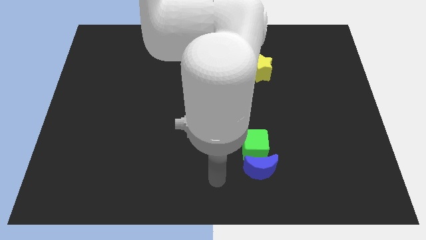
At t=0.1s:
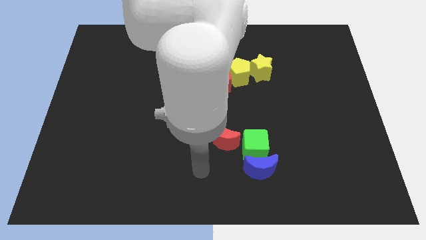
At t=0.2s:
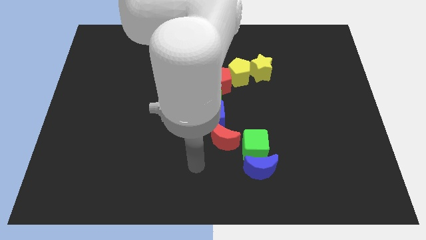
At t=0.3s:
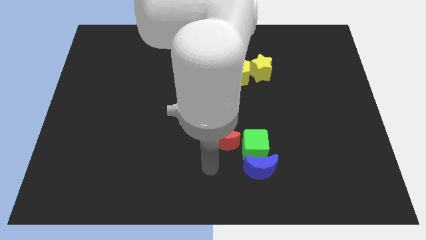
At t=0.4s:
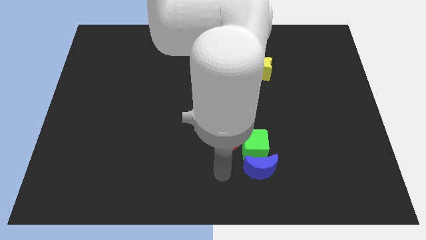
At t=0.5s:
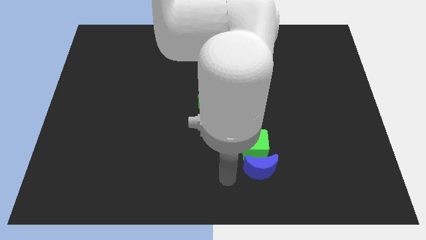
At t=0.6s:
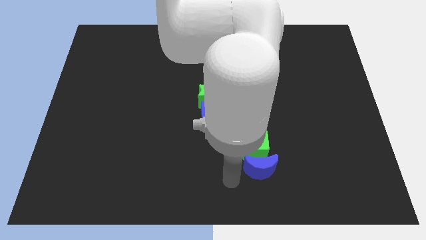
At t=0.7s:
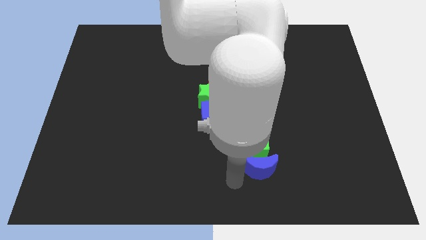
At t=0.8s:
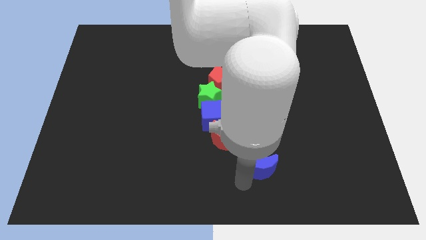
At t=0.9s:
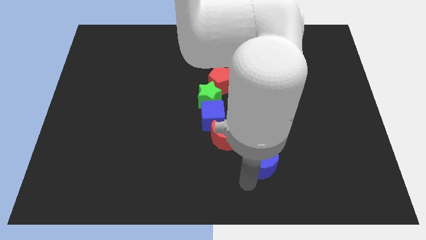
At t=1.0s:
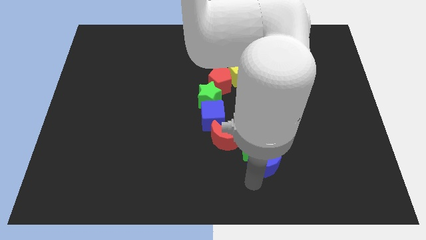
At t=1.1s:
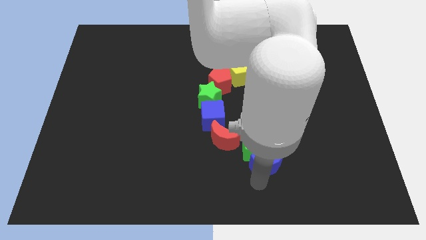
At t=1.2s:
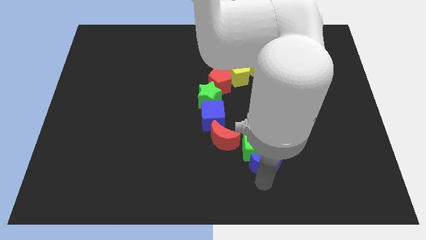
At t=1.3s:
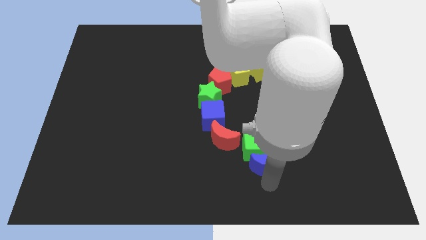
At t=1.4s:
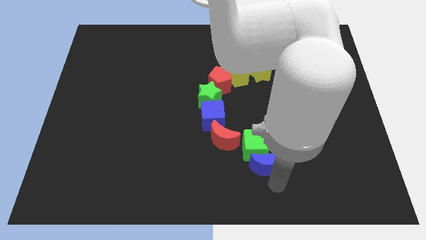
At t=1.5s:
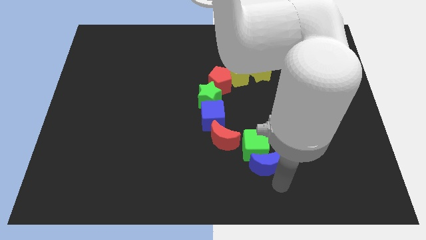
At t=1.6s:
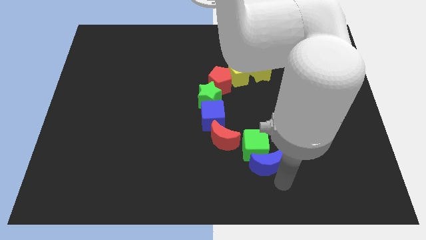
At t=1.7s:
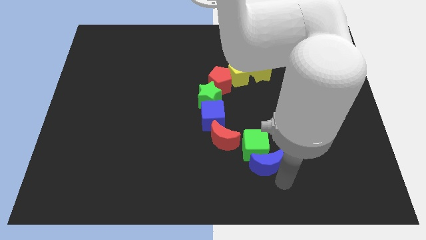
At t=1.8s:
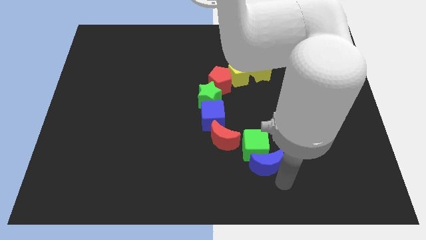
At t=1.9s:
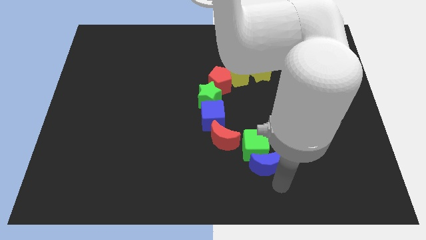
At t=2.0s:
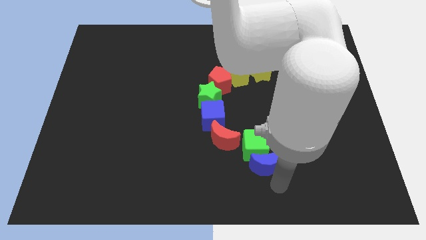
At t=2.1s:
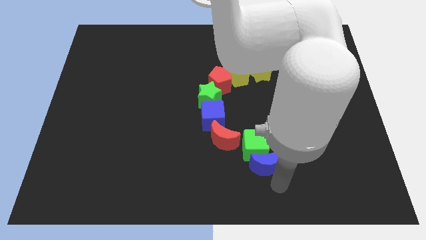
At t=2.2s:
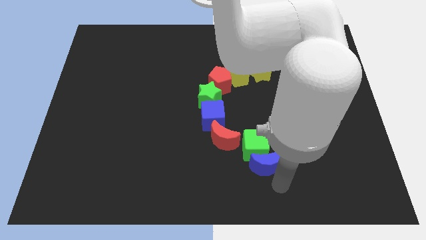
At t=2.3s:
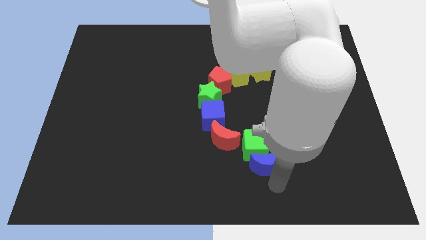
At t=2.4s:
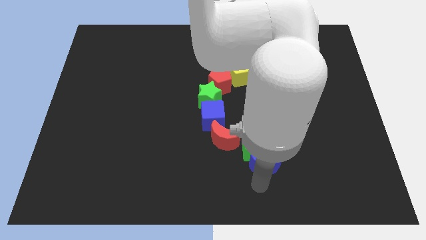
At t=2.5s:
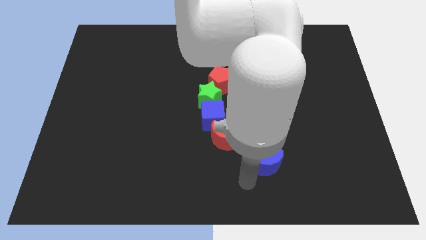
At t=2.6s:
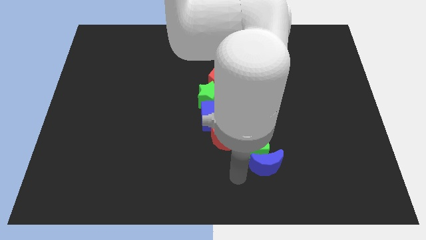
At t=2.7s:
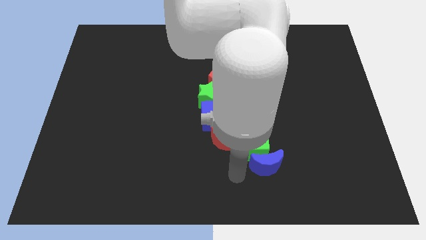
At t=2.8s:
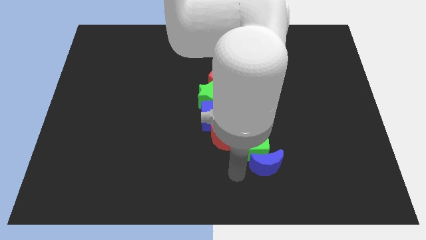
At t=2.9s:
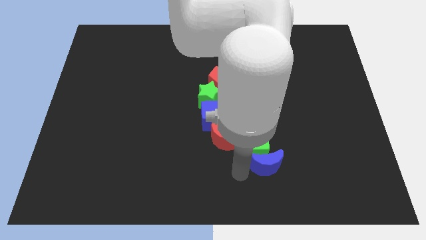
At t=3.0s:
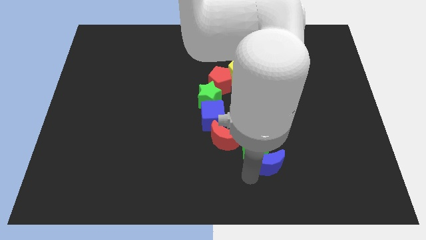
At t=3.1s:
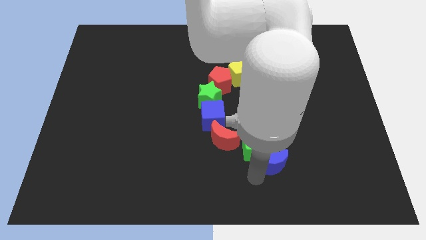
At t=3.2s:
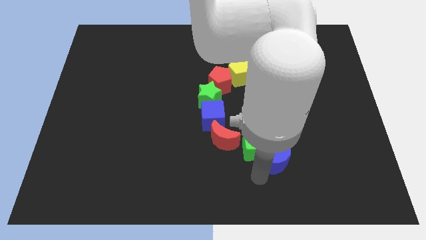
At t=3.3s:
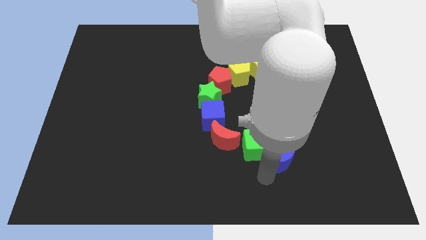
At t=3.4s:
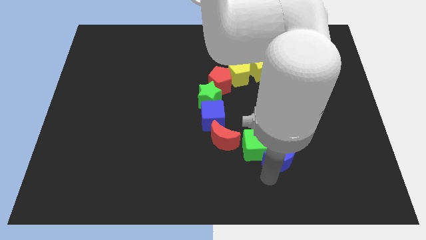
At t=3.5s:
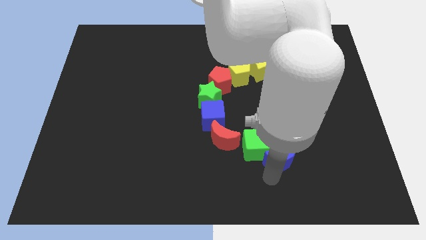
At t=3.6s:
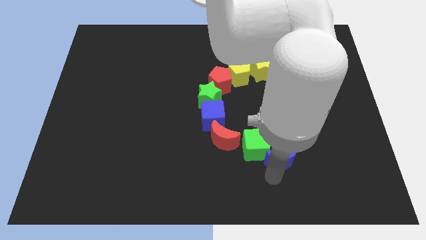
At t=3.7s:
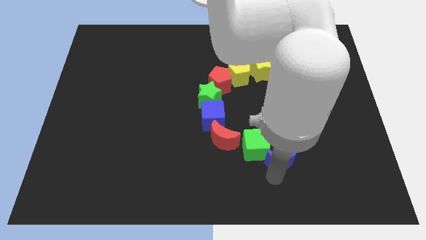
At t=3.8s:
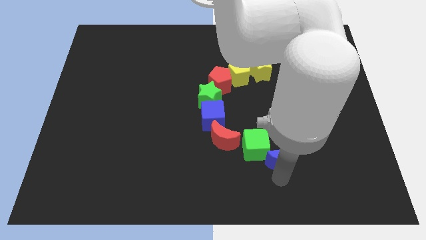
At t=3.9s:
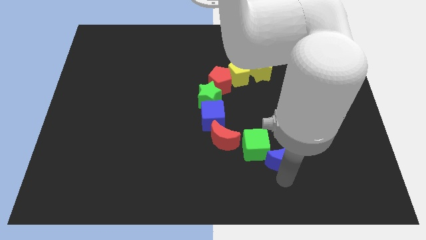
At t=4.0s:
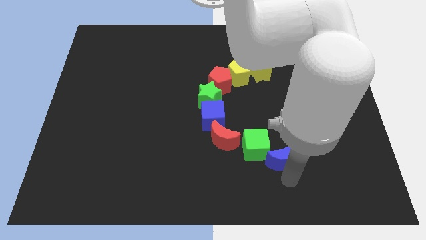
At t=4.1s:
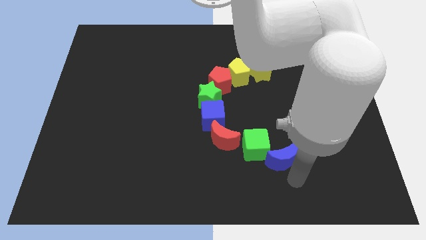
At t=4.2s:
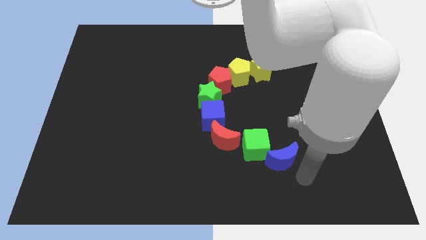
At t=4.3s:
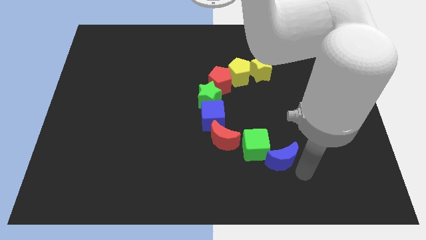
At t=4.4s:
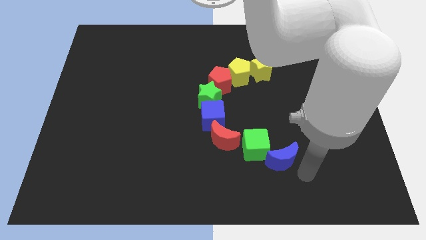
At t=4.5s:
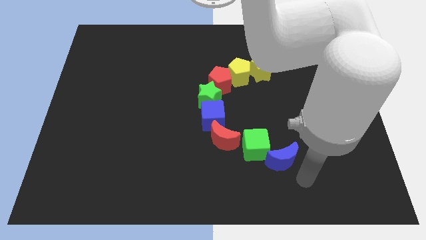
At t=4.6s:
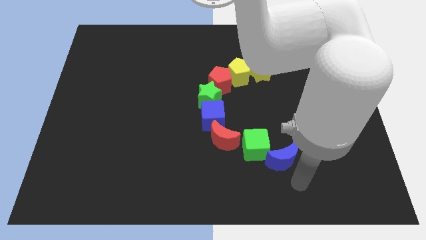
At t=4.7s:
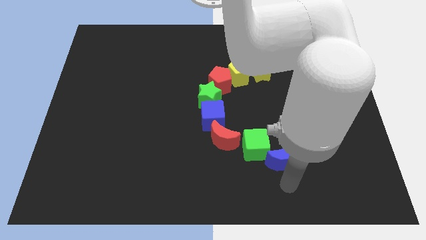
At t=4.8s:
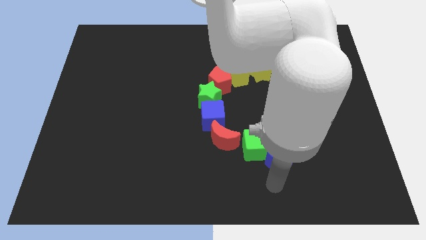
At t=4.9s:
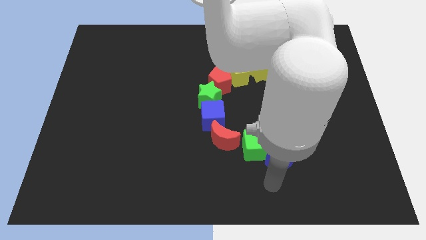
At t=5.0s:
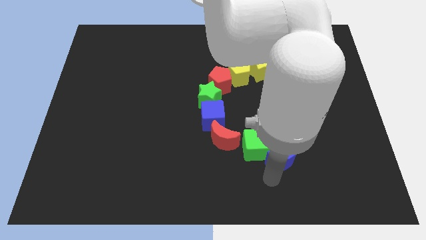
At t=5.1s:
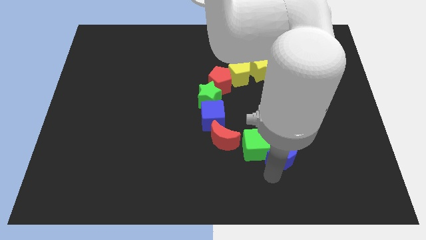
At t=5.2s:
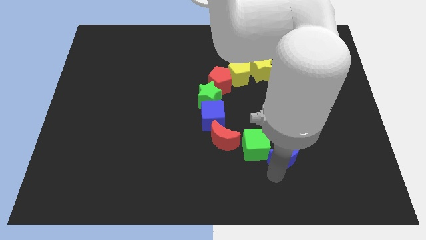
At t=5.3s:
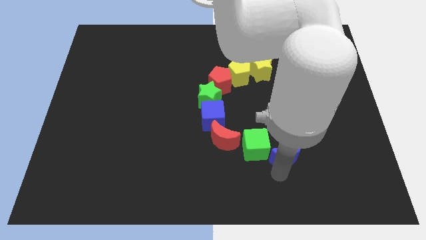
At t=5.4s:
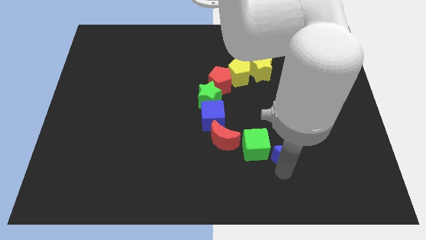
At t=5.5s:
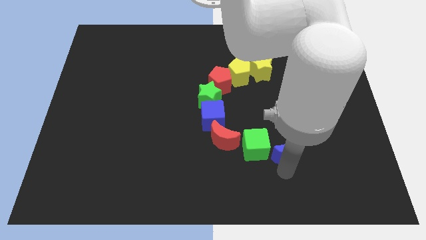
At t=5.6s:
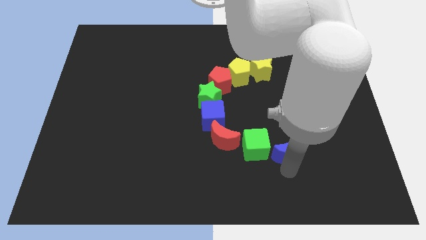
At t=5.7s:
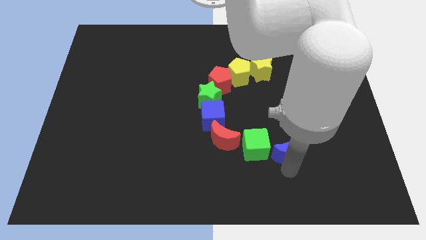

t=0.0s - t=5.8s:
place the blue moon right to the green cube

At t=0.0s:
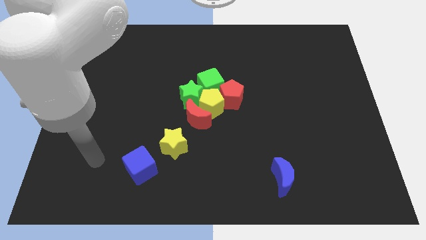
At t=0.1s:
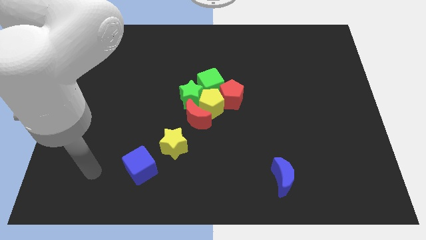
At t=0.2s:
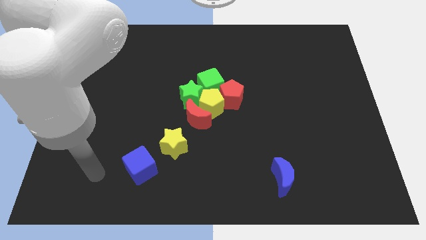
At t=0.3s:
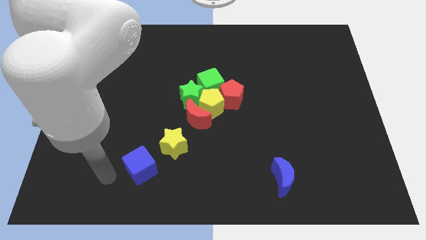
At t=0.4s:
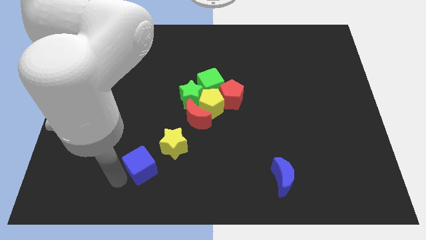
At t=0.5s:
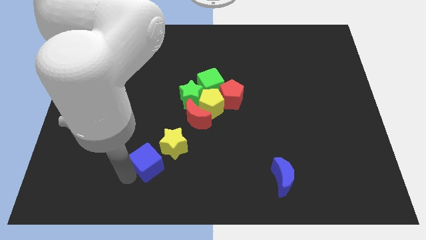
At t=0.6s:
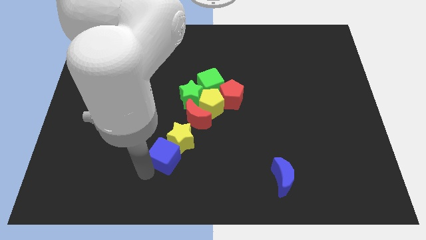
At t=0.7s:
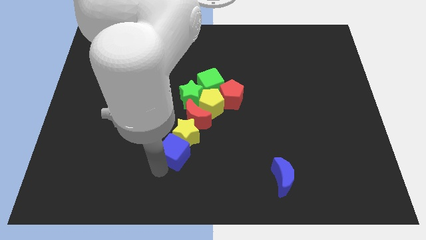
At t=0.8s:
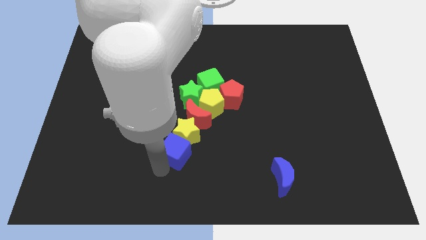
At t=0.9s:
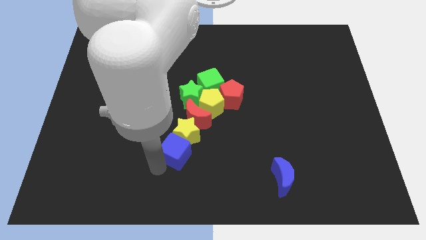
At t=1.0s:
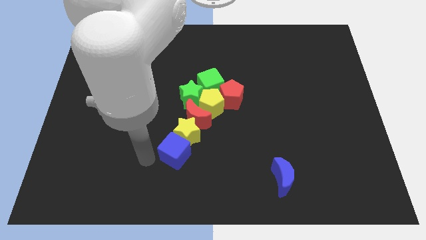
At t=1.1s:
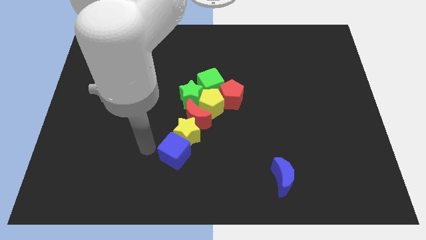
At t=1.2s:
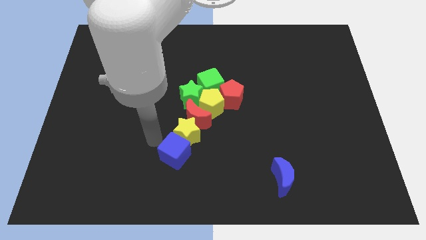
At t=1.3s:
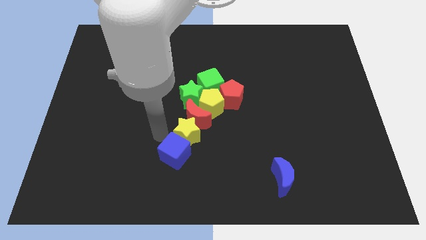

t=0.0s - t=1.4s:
push the blue cube into the yellow star

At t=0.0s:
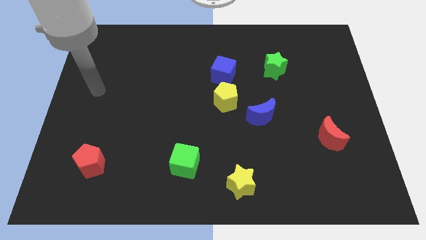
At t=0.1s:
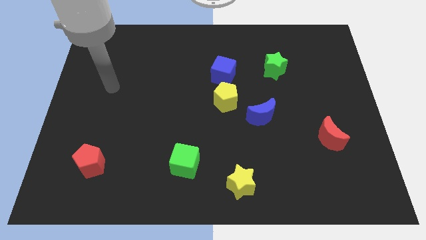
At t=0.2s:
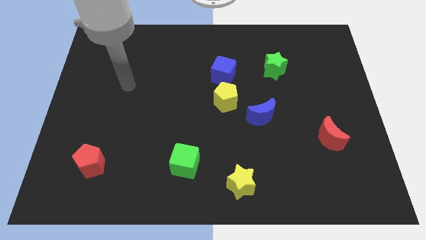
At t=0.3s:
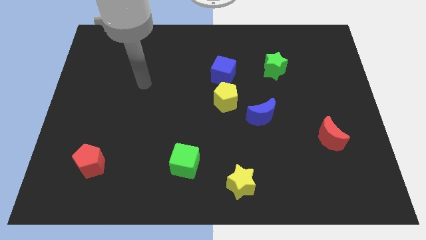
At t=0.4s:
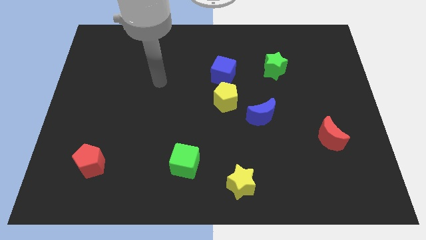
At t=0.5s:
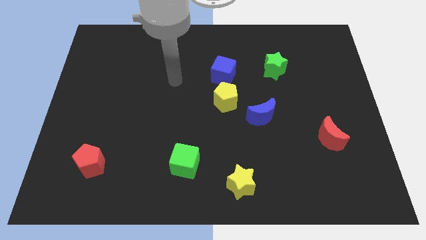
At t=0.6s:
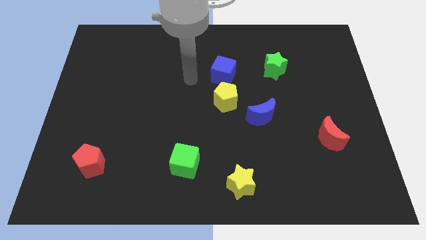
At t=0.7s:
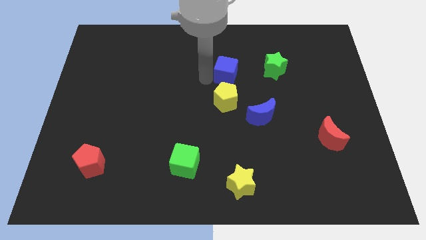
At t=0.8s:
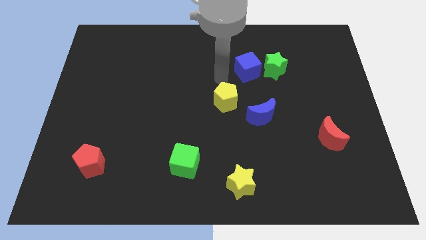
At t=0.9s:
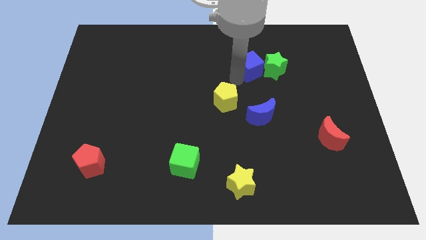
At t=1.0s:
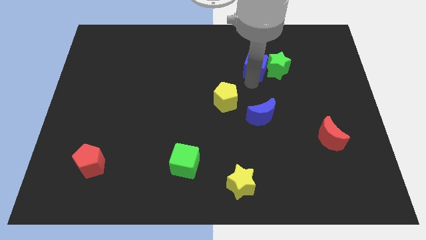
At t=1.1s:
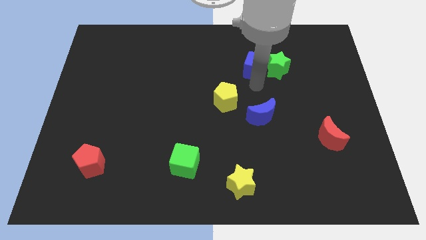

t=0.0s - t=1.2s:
place the blue cube to the left side of the green star

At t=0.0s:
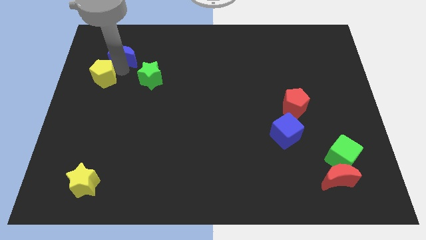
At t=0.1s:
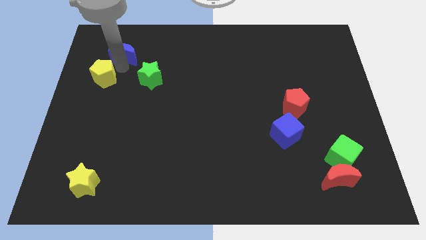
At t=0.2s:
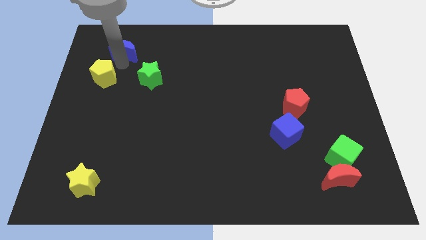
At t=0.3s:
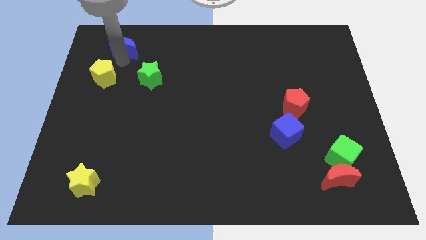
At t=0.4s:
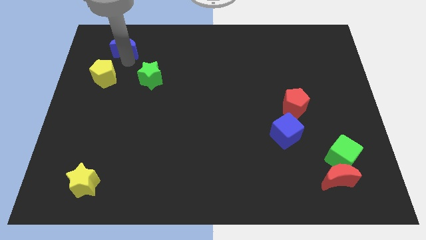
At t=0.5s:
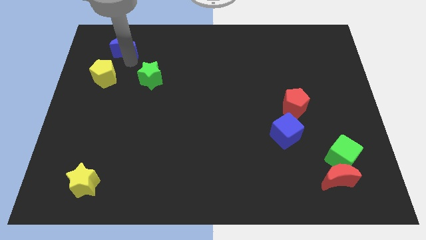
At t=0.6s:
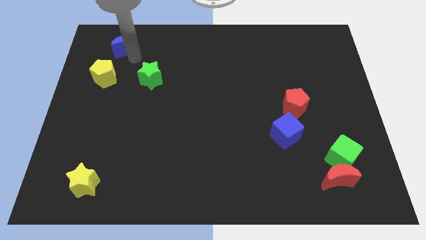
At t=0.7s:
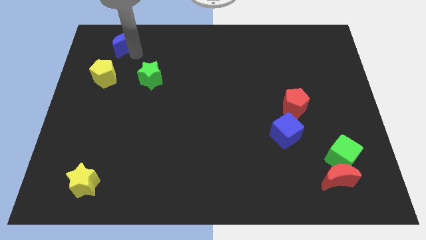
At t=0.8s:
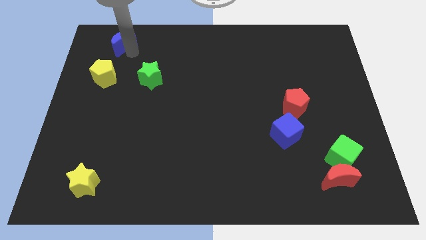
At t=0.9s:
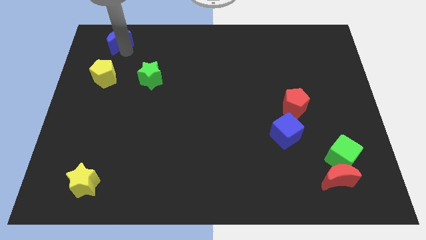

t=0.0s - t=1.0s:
push the blue crescent away from the yellow pentagon
